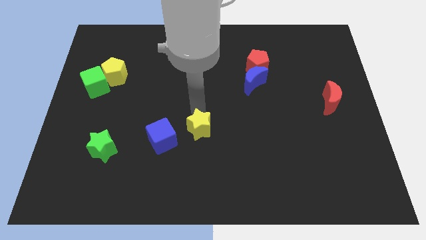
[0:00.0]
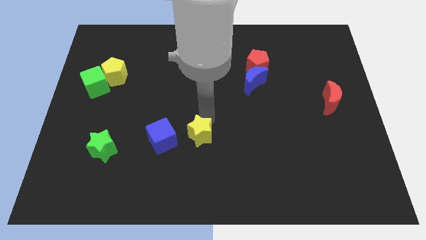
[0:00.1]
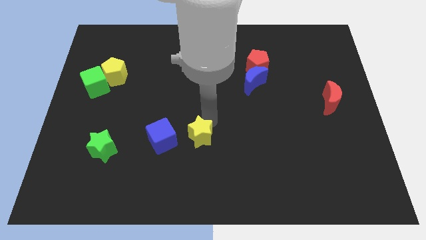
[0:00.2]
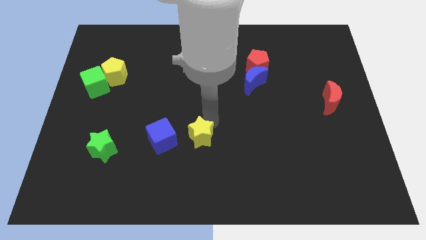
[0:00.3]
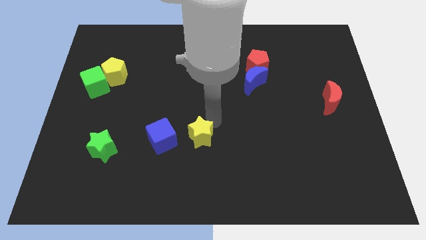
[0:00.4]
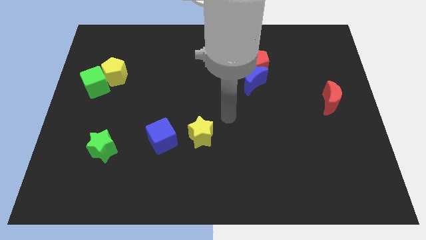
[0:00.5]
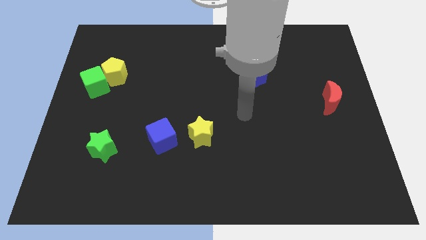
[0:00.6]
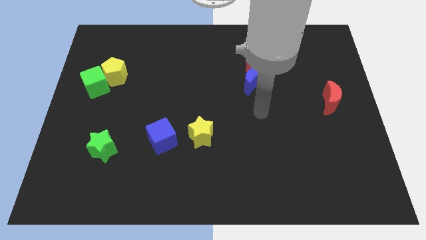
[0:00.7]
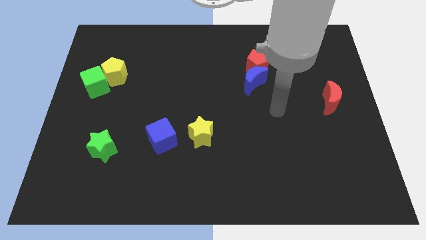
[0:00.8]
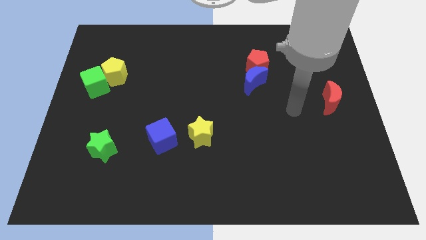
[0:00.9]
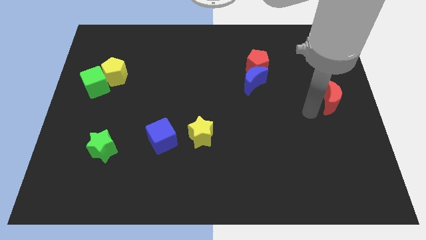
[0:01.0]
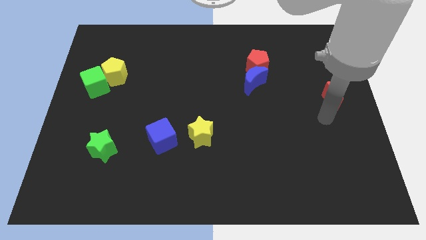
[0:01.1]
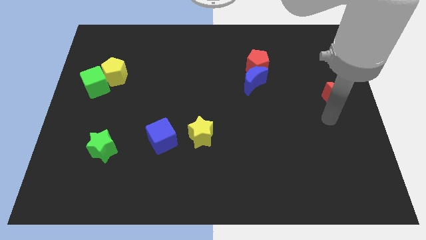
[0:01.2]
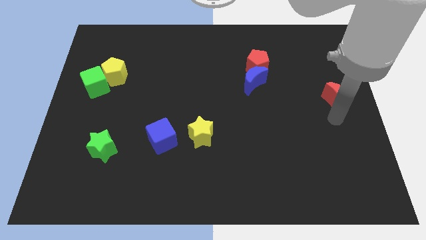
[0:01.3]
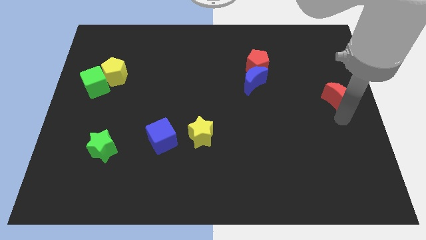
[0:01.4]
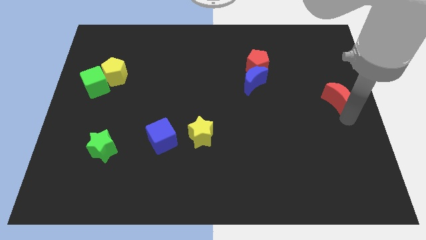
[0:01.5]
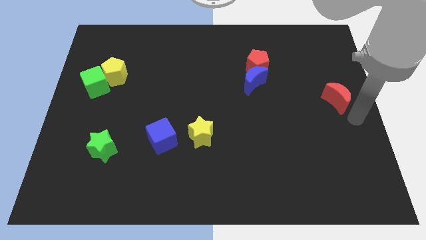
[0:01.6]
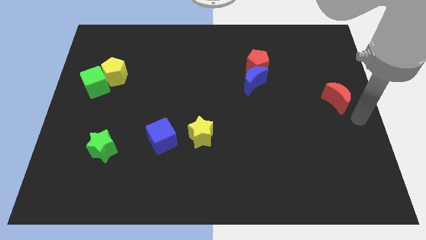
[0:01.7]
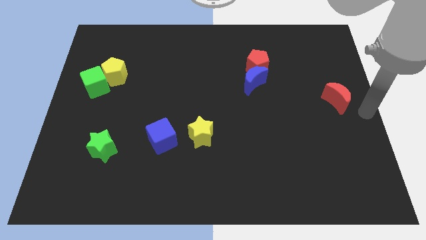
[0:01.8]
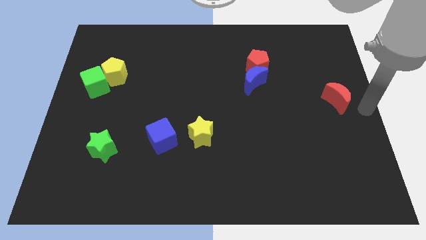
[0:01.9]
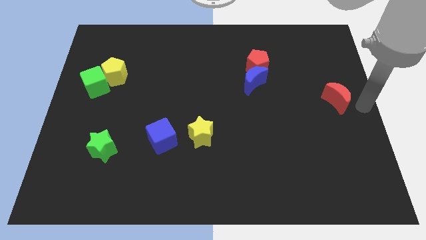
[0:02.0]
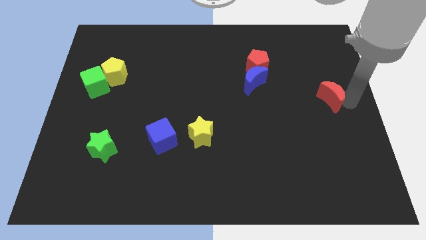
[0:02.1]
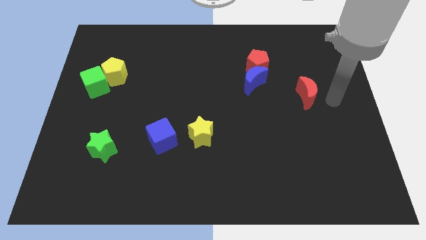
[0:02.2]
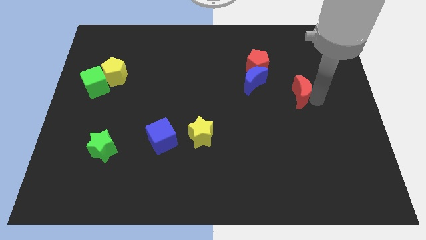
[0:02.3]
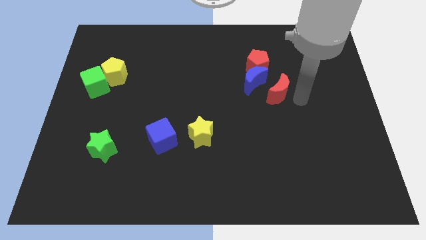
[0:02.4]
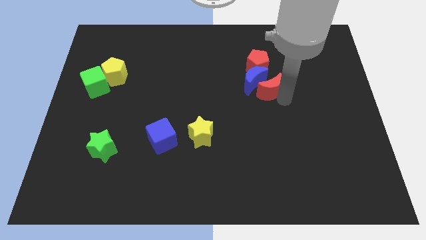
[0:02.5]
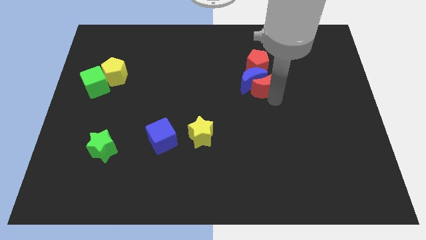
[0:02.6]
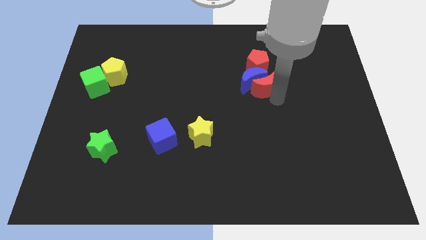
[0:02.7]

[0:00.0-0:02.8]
move red moon into blue moon

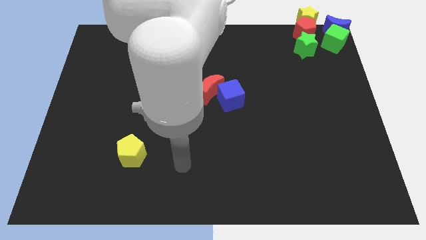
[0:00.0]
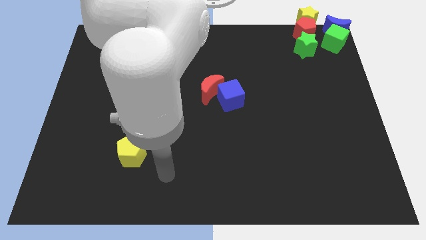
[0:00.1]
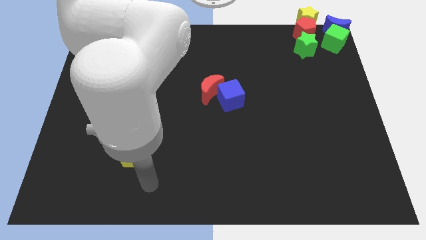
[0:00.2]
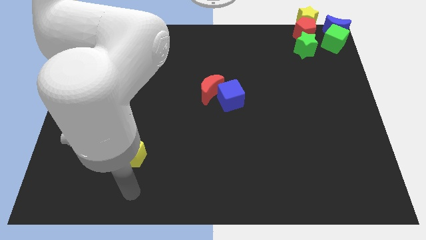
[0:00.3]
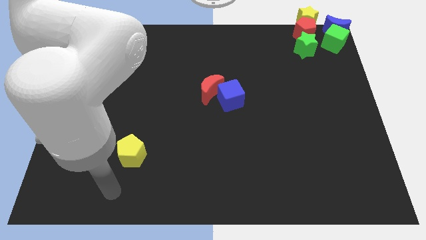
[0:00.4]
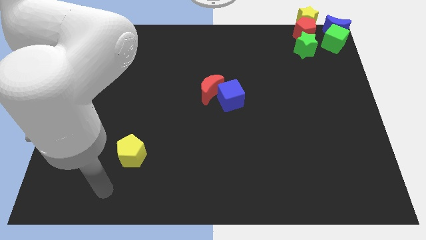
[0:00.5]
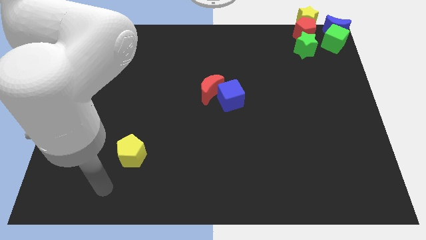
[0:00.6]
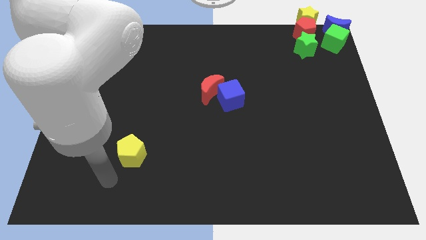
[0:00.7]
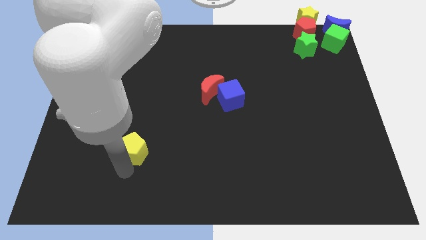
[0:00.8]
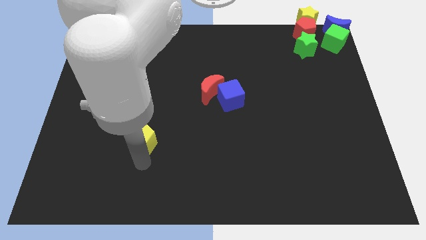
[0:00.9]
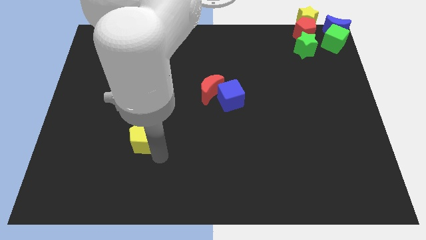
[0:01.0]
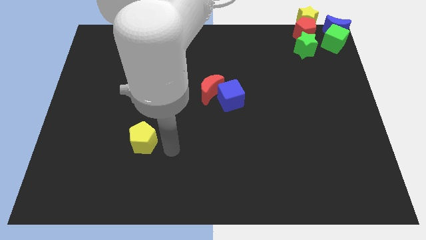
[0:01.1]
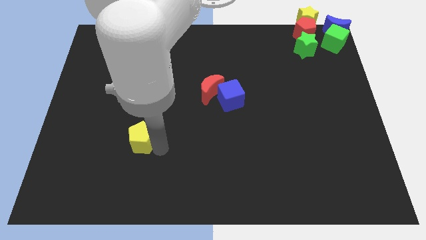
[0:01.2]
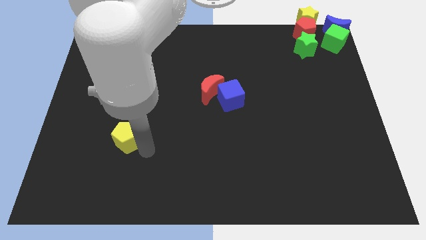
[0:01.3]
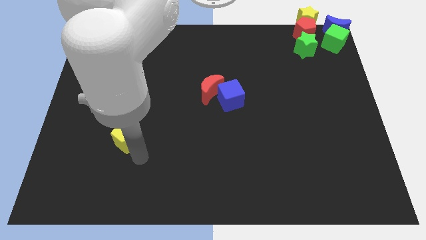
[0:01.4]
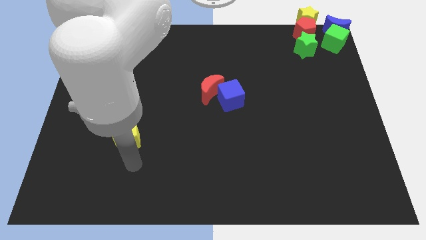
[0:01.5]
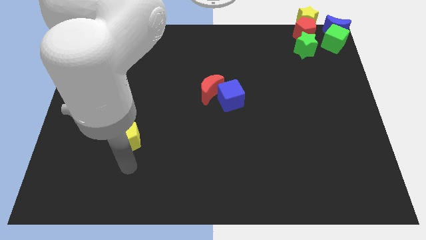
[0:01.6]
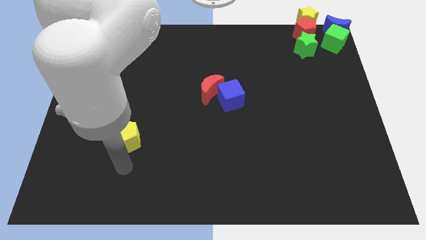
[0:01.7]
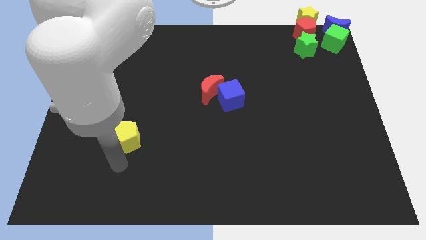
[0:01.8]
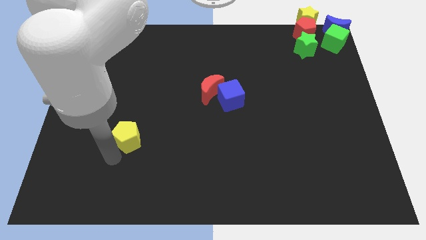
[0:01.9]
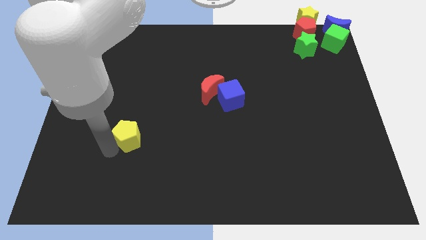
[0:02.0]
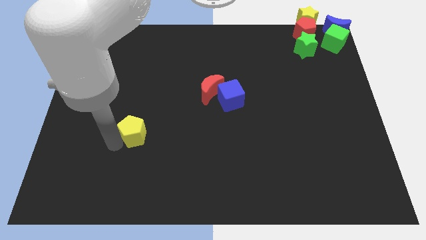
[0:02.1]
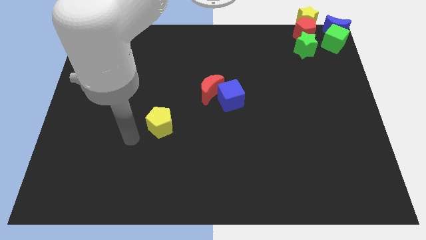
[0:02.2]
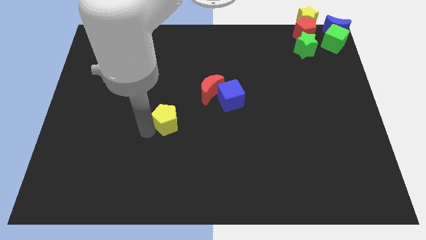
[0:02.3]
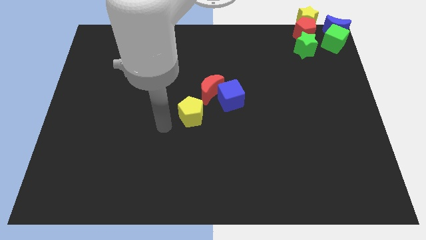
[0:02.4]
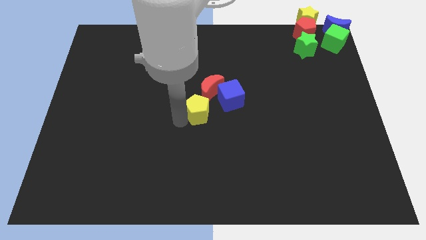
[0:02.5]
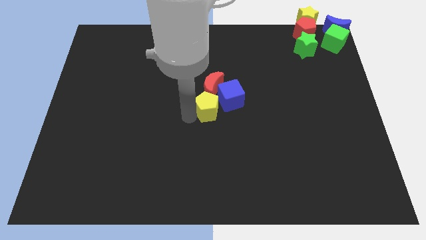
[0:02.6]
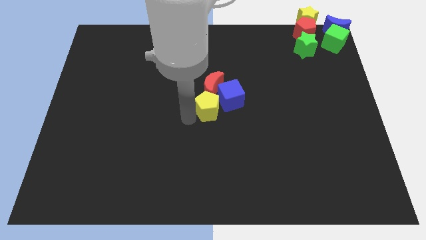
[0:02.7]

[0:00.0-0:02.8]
push the yellow pentagon to the middle of the board

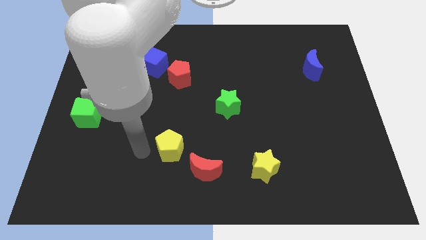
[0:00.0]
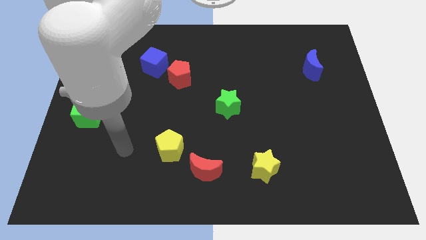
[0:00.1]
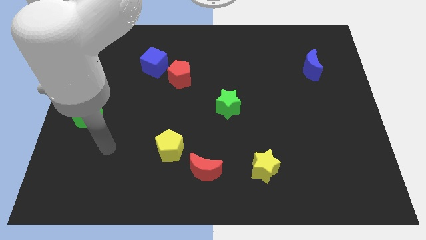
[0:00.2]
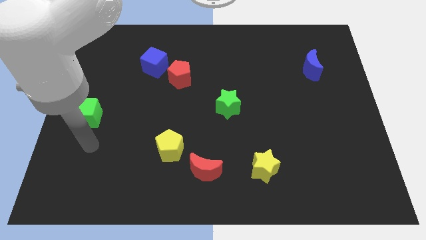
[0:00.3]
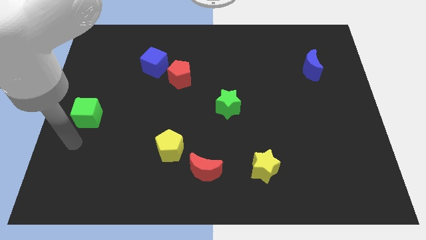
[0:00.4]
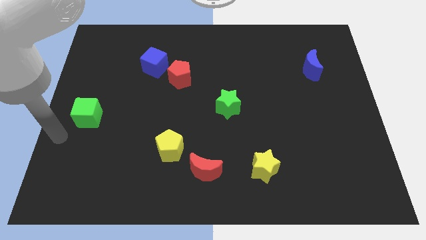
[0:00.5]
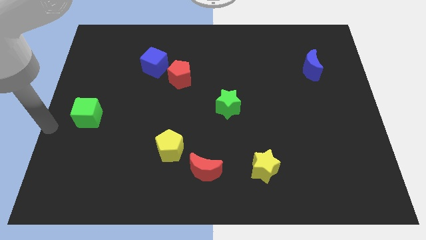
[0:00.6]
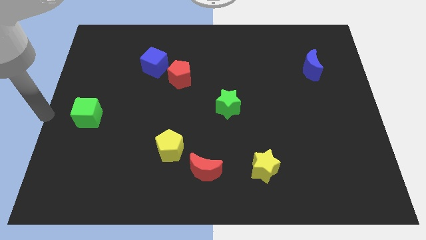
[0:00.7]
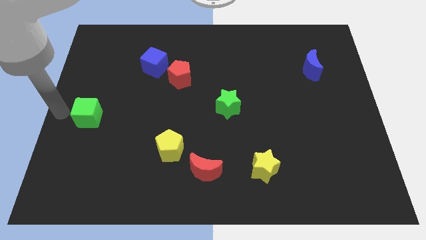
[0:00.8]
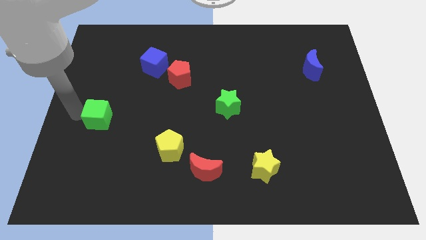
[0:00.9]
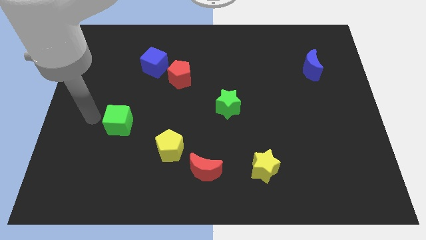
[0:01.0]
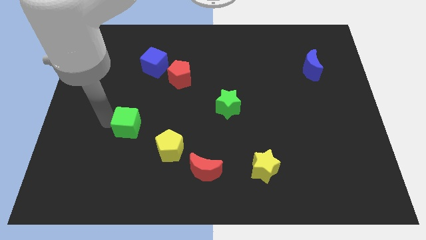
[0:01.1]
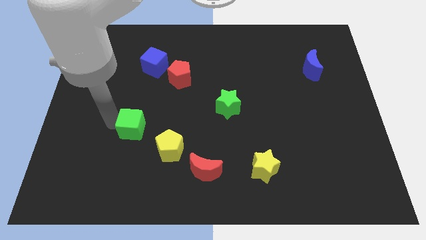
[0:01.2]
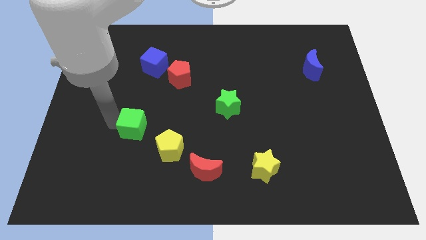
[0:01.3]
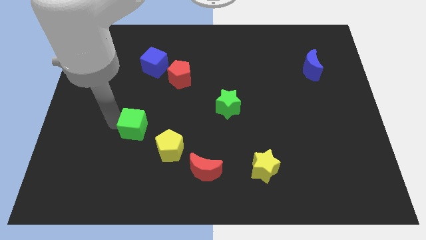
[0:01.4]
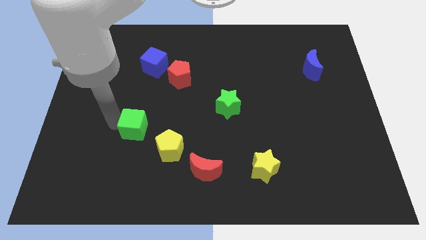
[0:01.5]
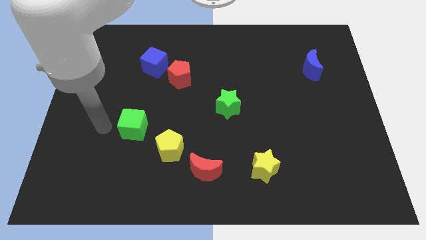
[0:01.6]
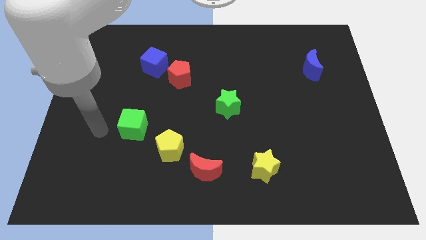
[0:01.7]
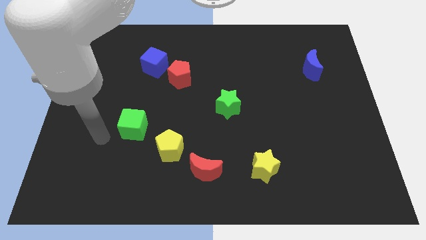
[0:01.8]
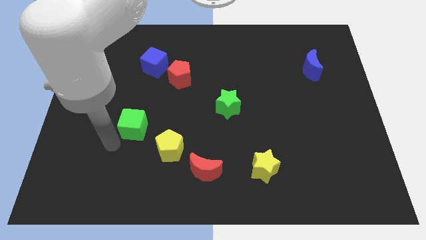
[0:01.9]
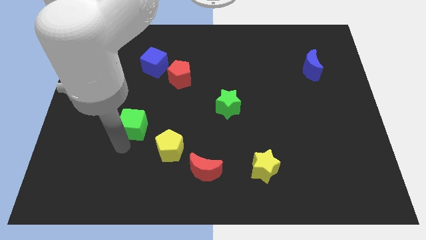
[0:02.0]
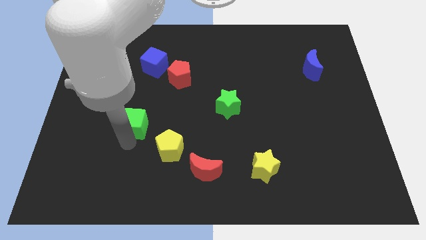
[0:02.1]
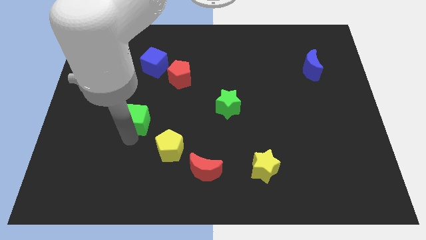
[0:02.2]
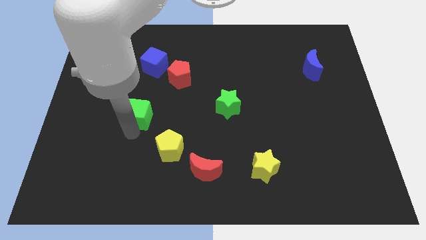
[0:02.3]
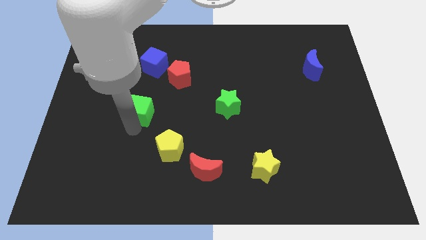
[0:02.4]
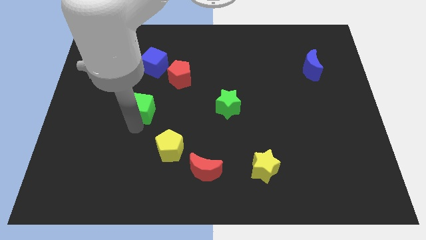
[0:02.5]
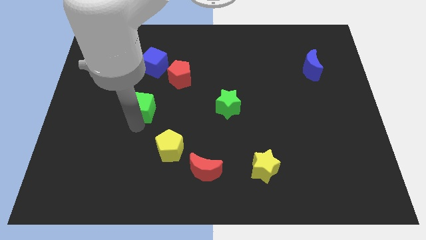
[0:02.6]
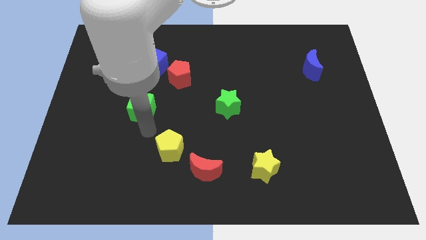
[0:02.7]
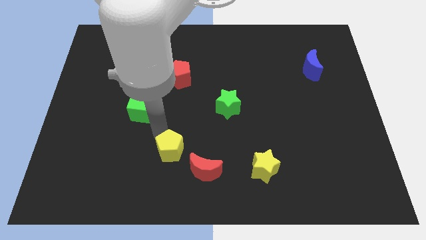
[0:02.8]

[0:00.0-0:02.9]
slide the green cube diagonally top left yellow pentagon

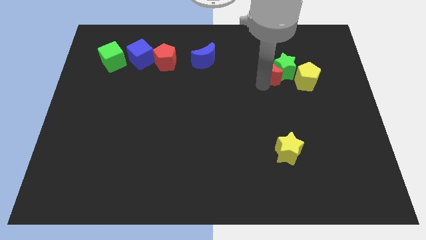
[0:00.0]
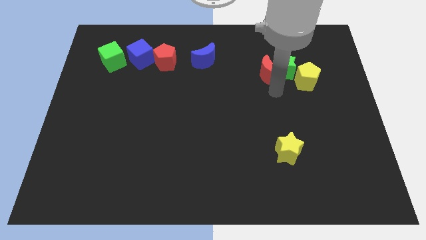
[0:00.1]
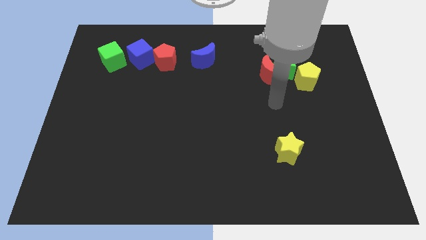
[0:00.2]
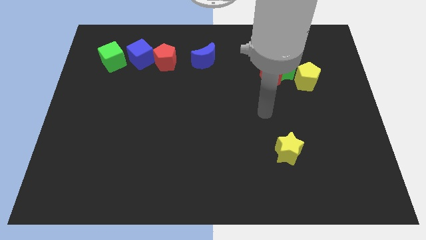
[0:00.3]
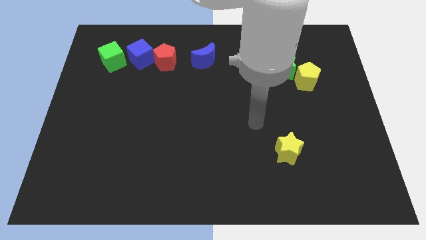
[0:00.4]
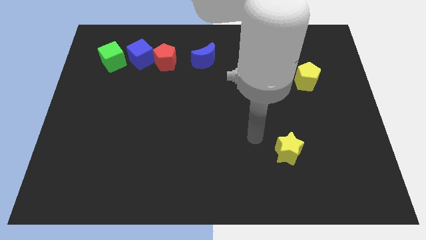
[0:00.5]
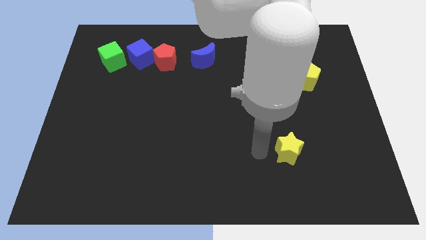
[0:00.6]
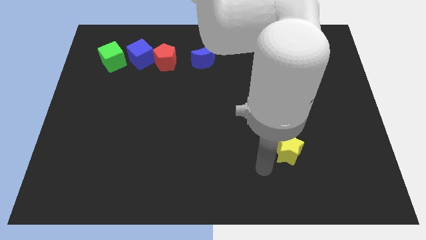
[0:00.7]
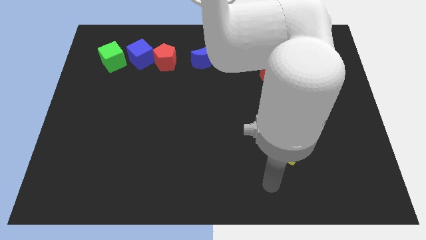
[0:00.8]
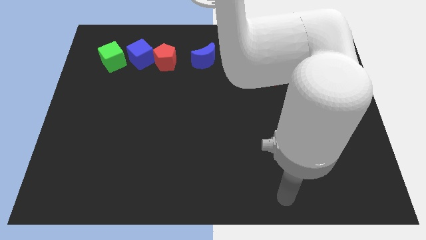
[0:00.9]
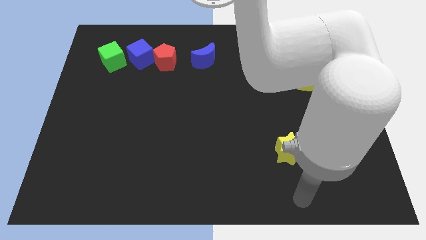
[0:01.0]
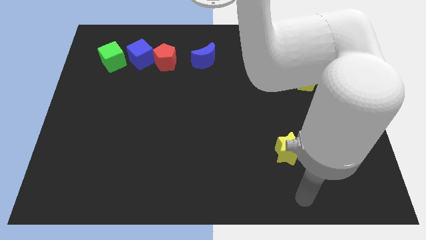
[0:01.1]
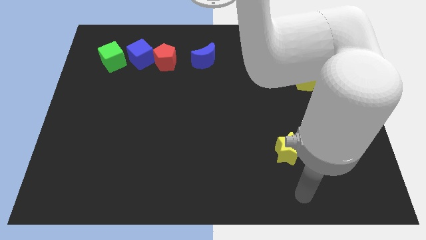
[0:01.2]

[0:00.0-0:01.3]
point your arm at the bottom of the yellow star
